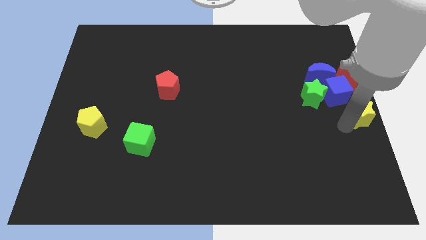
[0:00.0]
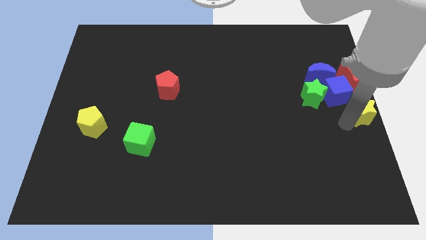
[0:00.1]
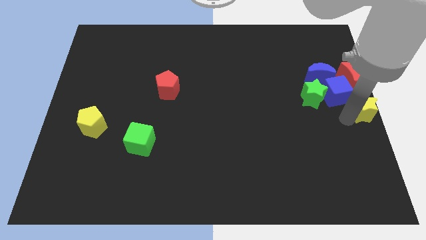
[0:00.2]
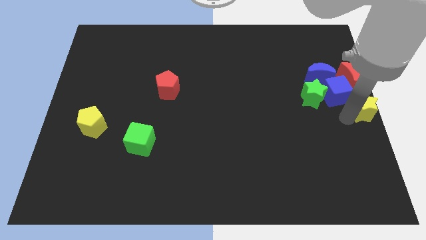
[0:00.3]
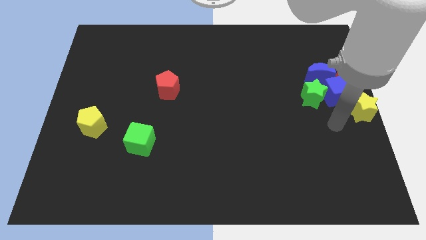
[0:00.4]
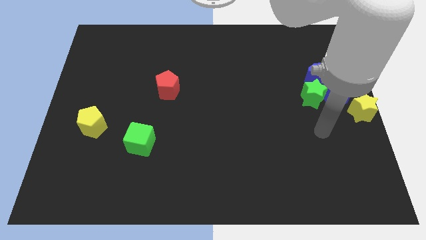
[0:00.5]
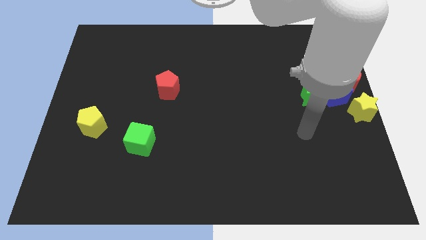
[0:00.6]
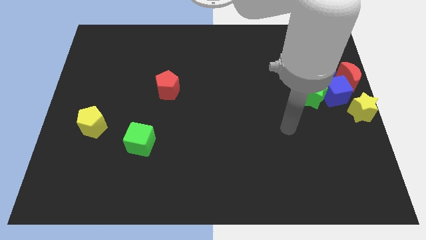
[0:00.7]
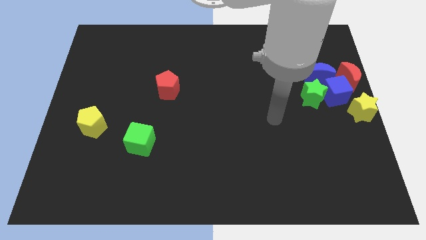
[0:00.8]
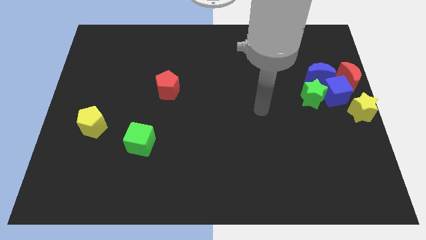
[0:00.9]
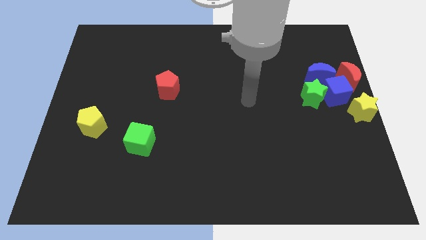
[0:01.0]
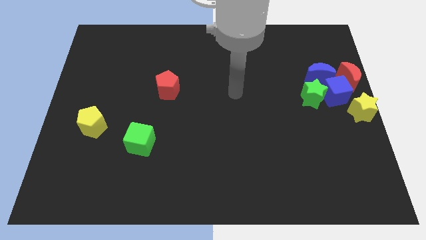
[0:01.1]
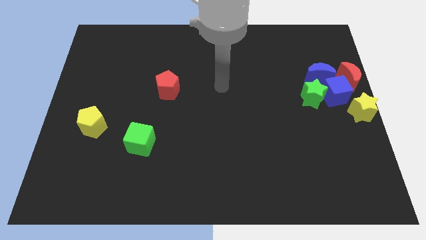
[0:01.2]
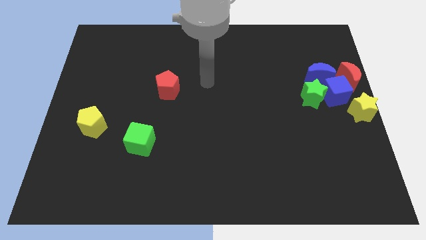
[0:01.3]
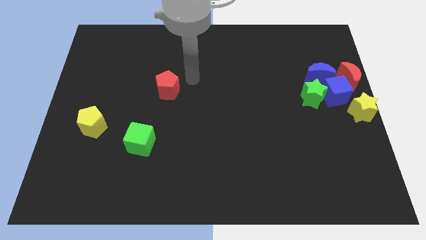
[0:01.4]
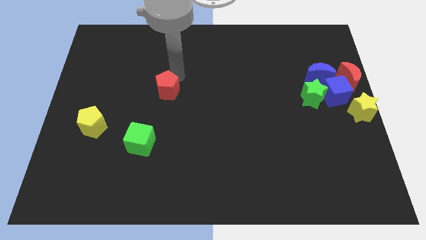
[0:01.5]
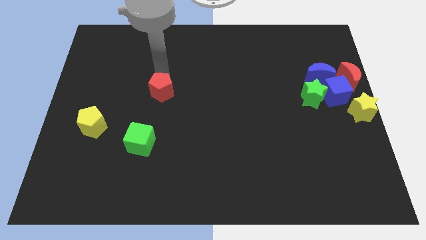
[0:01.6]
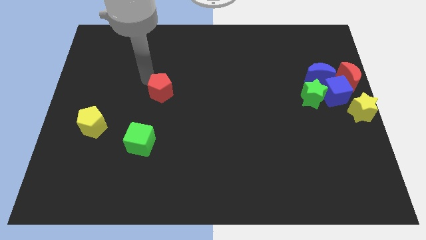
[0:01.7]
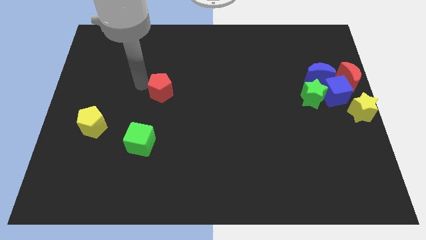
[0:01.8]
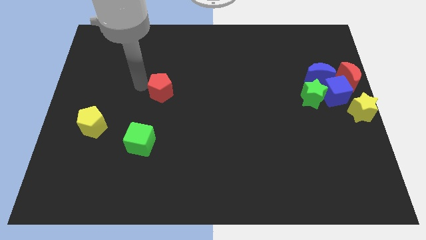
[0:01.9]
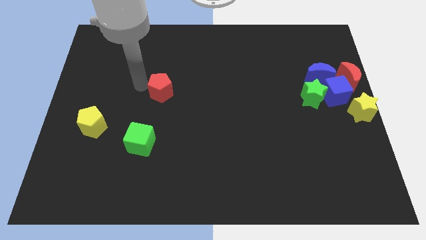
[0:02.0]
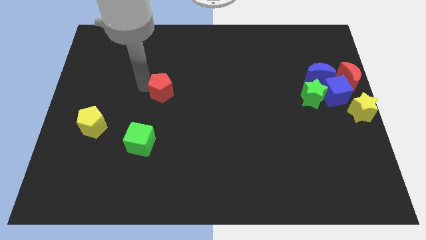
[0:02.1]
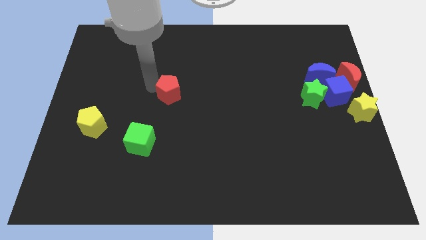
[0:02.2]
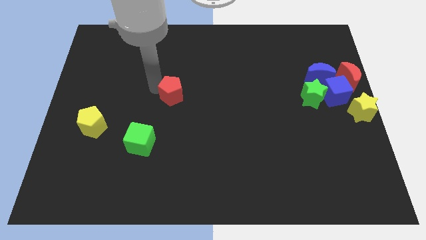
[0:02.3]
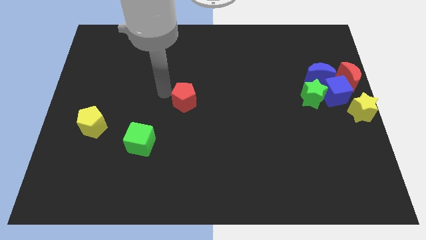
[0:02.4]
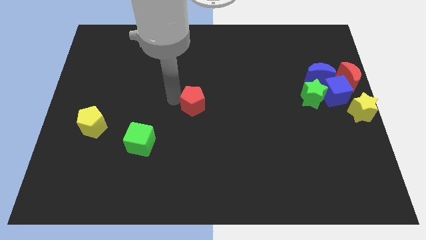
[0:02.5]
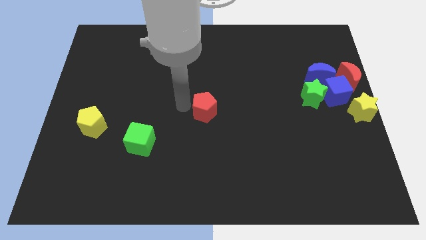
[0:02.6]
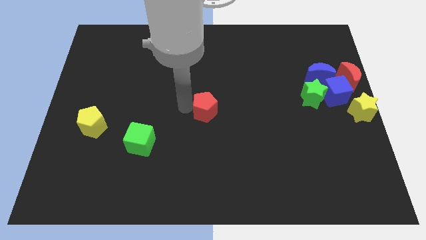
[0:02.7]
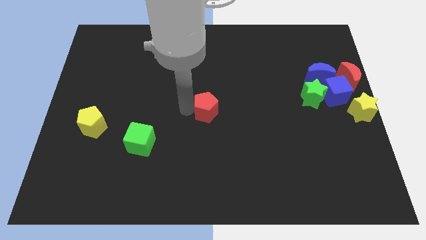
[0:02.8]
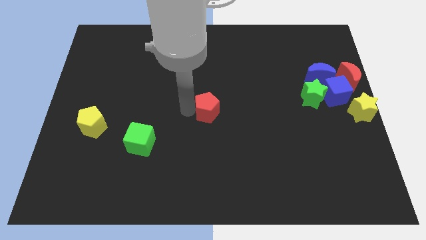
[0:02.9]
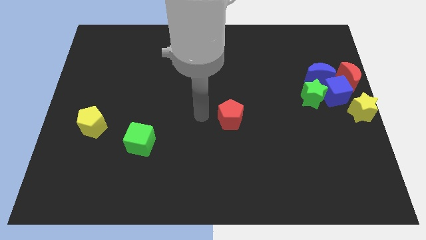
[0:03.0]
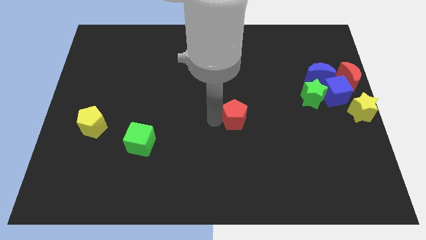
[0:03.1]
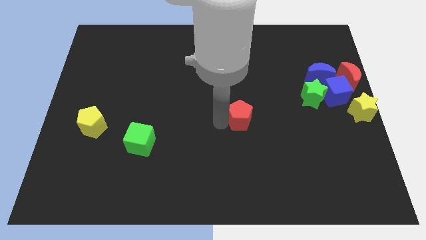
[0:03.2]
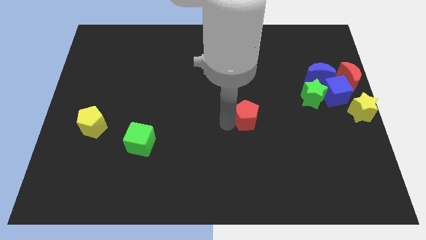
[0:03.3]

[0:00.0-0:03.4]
place the red pentagon between green star and green cube

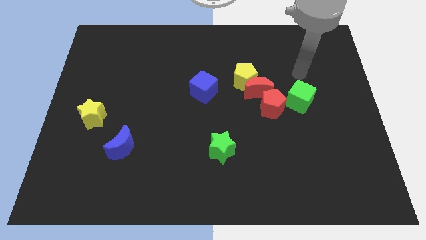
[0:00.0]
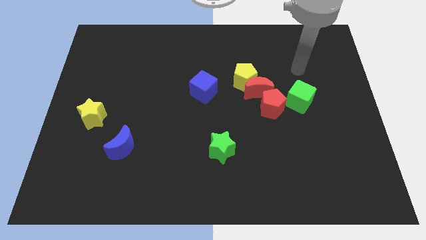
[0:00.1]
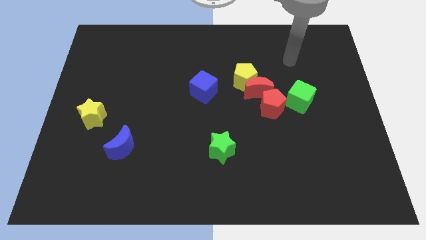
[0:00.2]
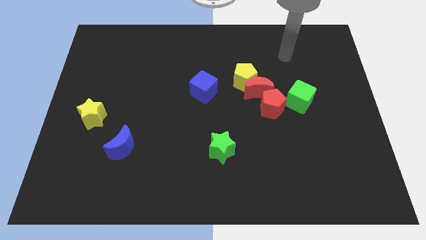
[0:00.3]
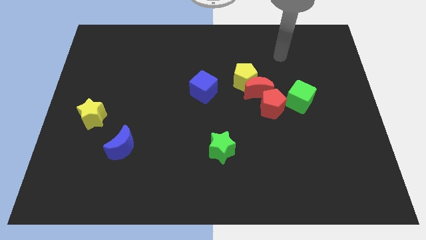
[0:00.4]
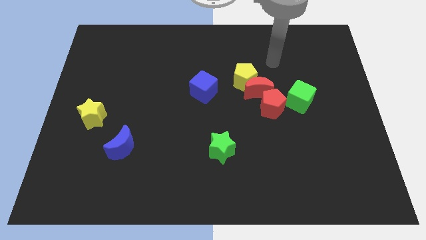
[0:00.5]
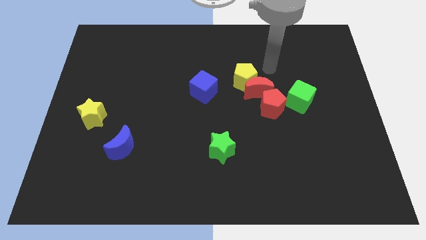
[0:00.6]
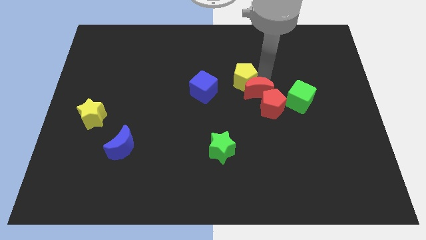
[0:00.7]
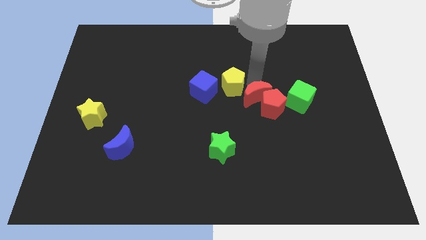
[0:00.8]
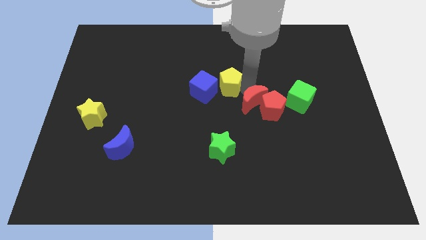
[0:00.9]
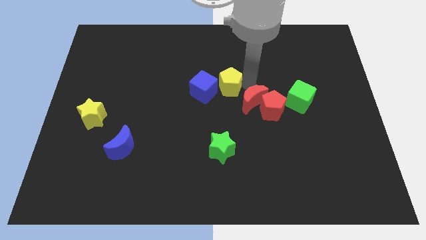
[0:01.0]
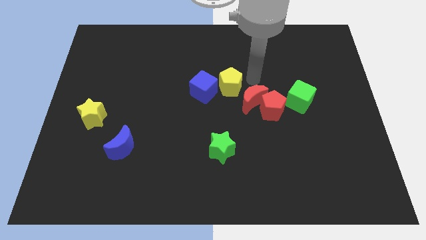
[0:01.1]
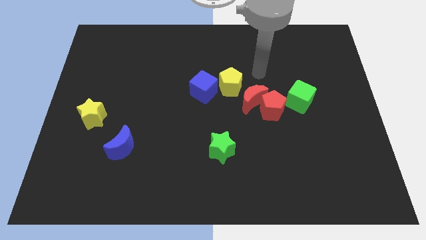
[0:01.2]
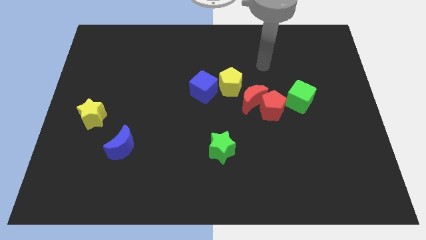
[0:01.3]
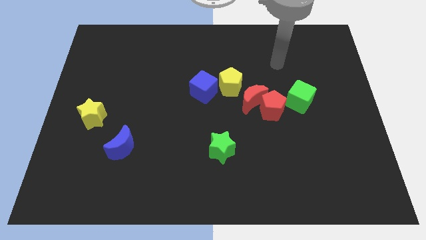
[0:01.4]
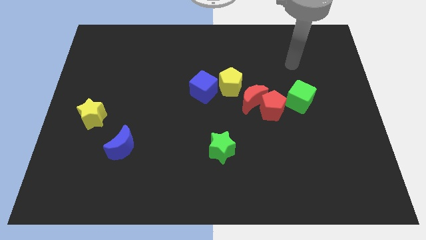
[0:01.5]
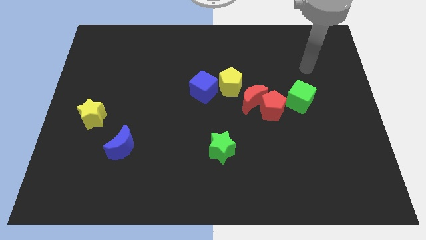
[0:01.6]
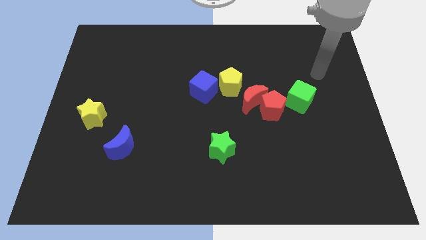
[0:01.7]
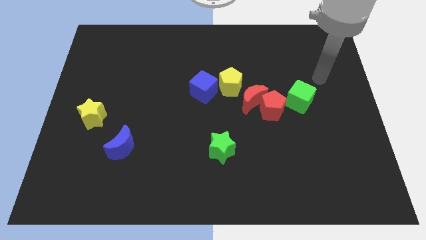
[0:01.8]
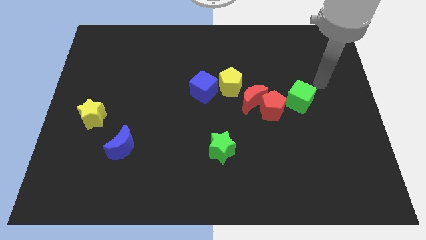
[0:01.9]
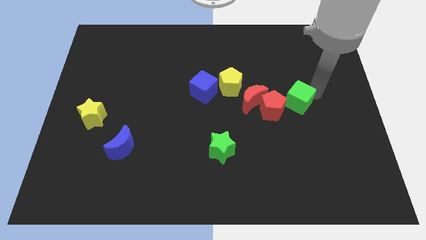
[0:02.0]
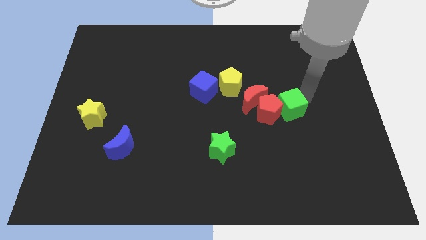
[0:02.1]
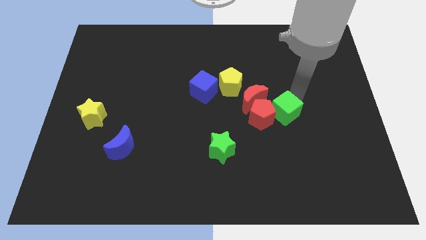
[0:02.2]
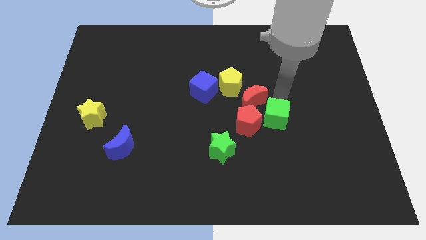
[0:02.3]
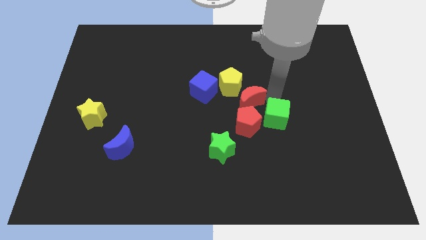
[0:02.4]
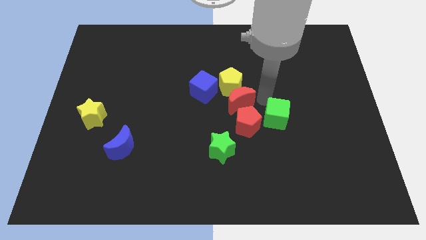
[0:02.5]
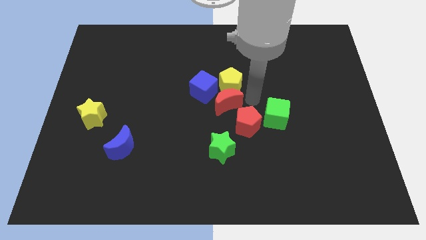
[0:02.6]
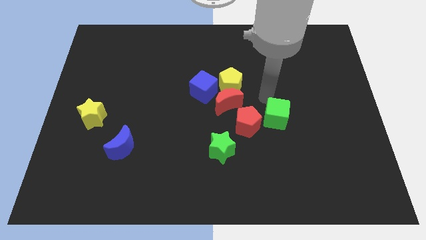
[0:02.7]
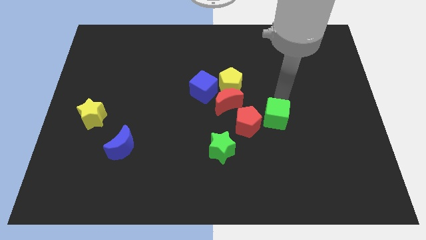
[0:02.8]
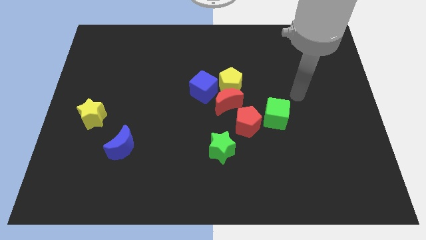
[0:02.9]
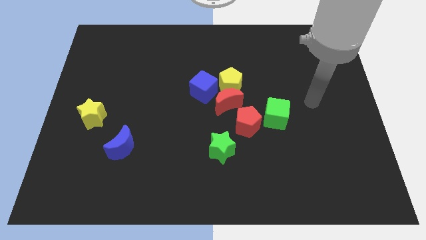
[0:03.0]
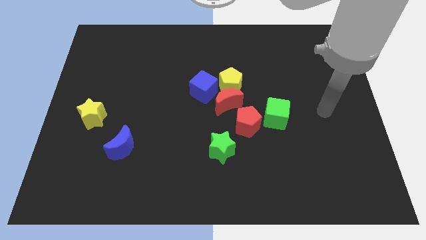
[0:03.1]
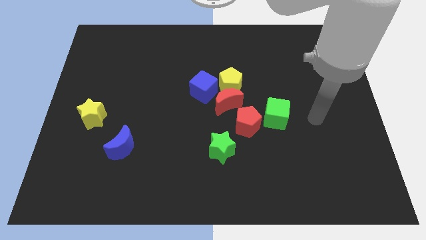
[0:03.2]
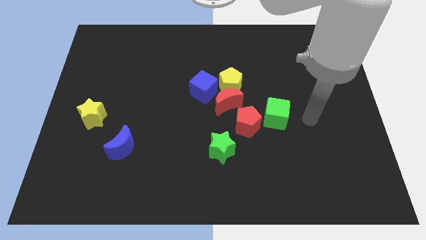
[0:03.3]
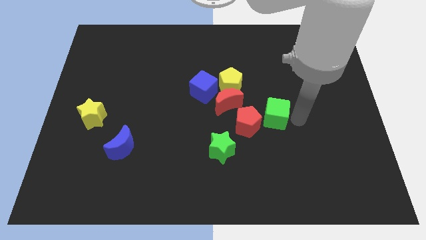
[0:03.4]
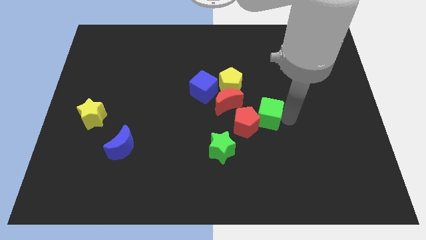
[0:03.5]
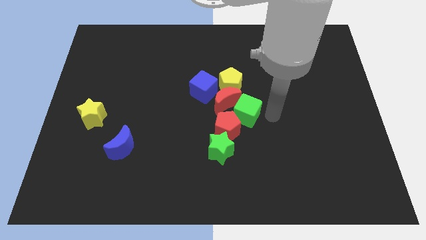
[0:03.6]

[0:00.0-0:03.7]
push the green cube into red pentagon

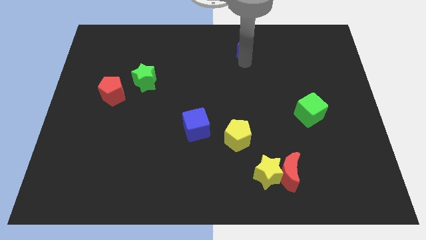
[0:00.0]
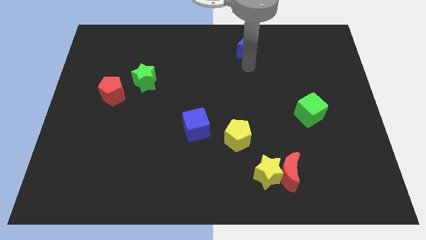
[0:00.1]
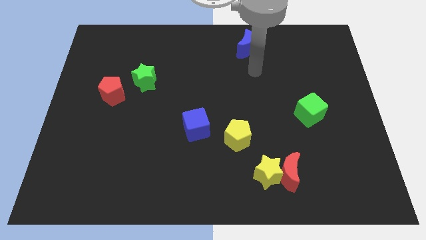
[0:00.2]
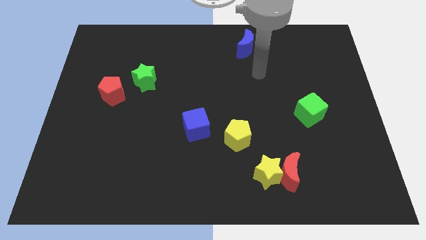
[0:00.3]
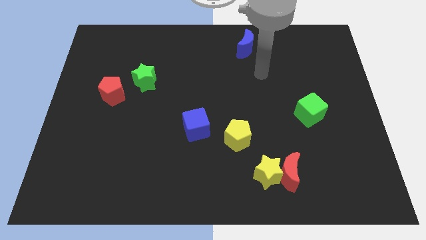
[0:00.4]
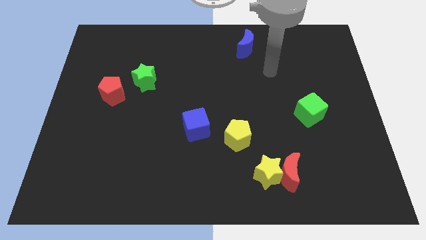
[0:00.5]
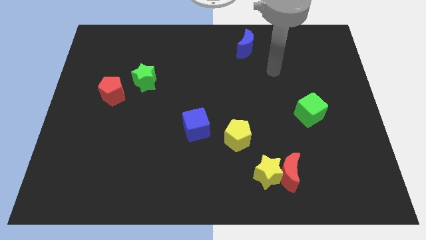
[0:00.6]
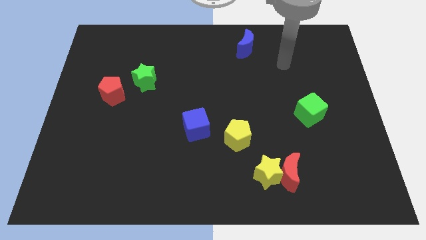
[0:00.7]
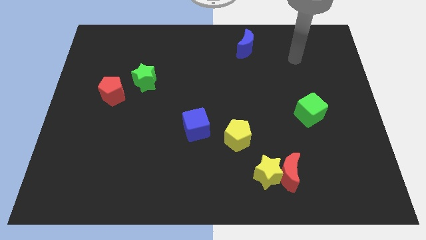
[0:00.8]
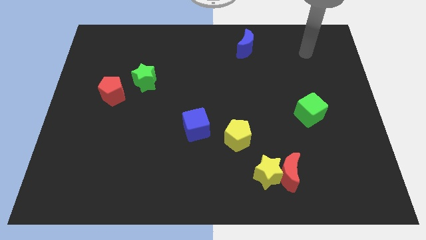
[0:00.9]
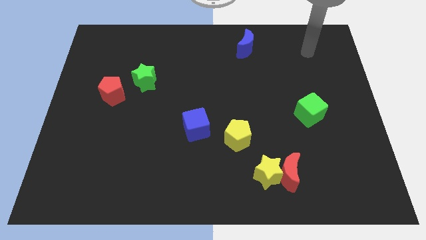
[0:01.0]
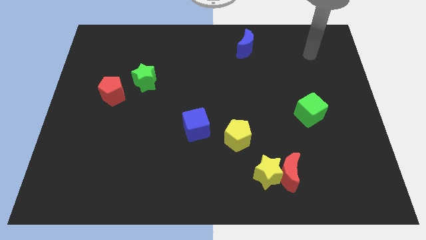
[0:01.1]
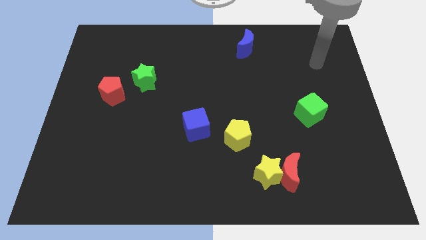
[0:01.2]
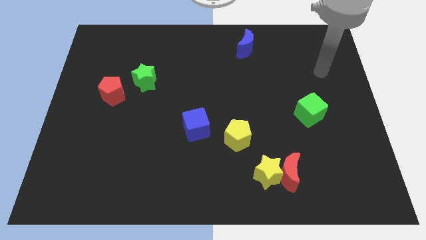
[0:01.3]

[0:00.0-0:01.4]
move your arm towards the right side of the board

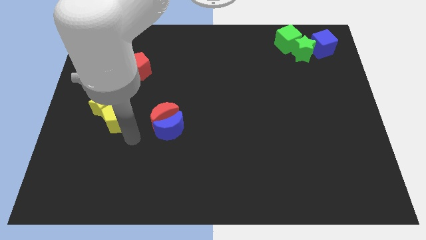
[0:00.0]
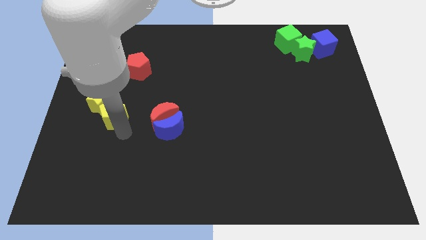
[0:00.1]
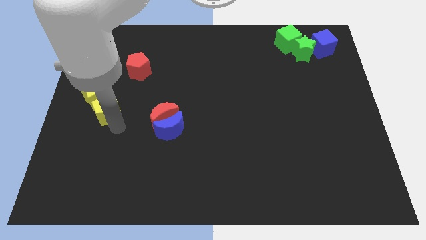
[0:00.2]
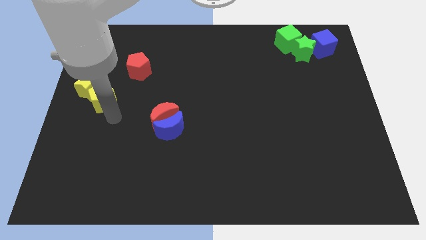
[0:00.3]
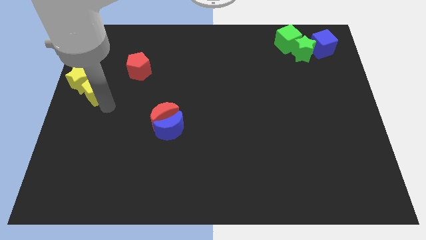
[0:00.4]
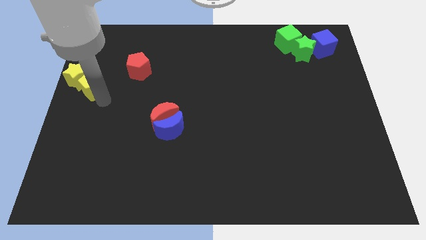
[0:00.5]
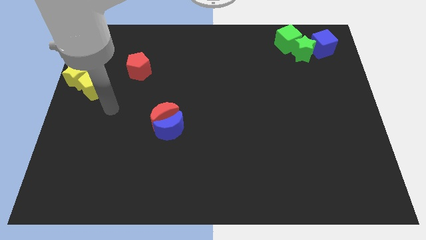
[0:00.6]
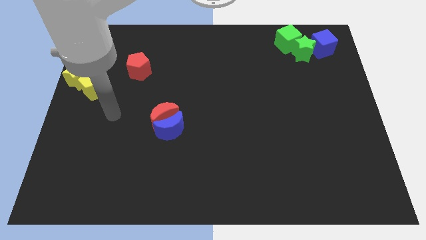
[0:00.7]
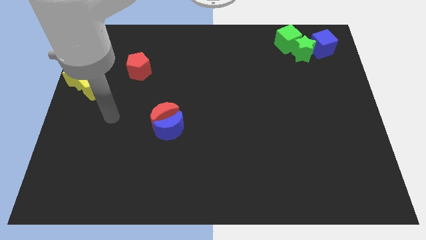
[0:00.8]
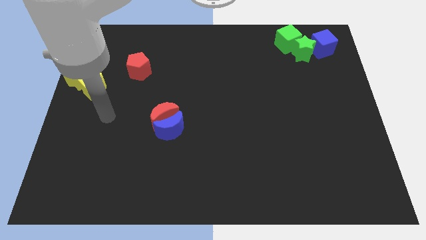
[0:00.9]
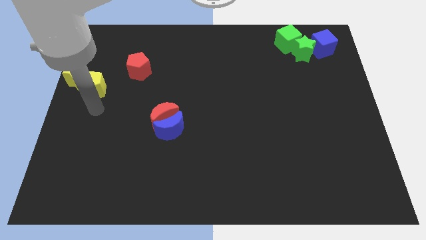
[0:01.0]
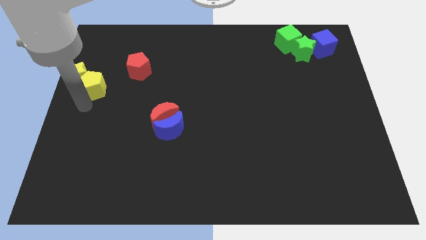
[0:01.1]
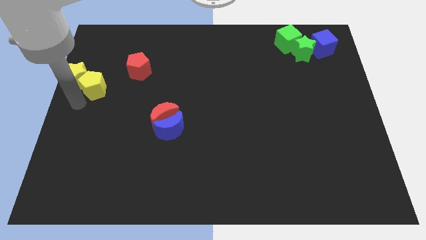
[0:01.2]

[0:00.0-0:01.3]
move the yellow star and pentagon to left of the board
